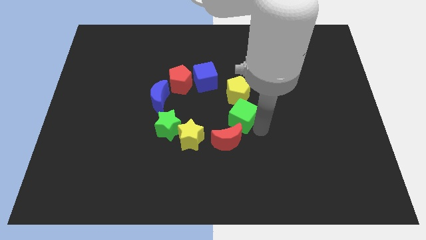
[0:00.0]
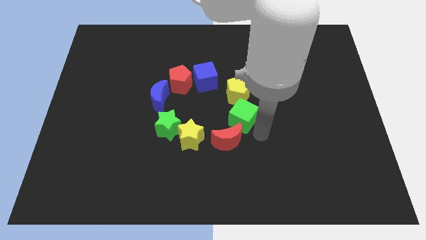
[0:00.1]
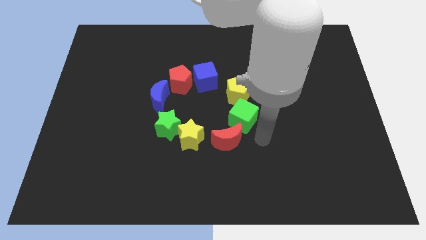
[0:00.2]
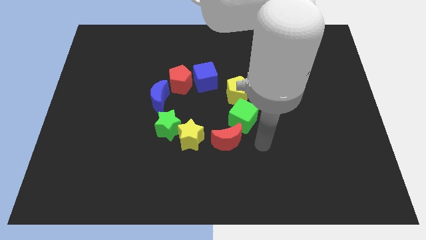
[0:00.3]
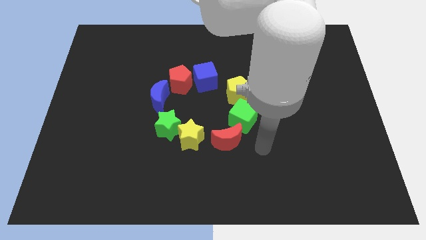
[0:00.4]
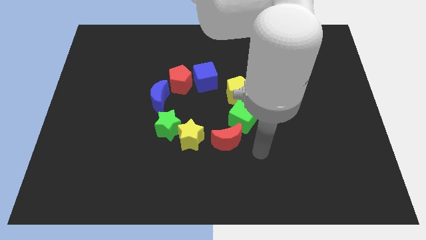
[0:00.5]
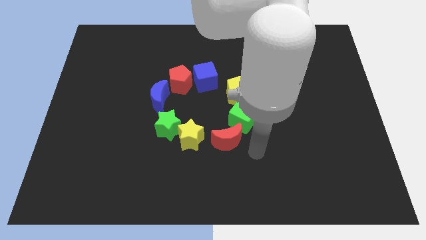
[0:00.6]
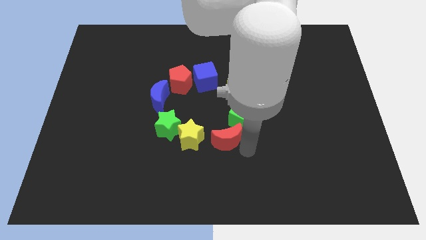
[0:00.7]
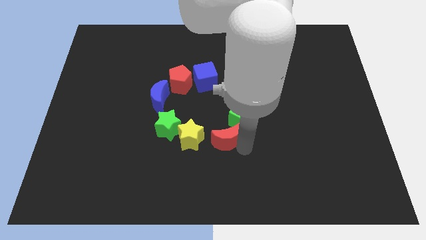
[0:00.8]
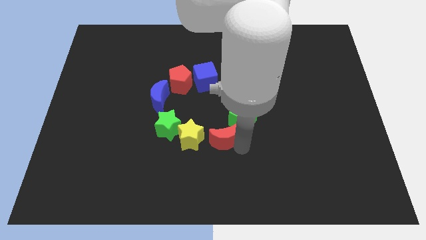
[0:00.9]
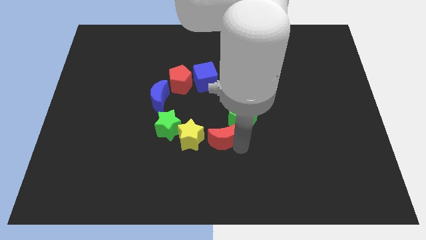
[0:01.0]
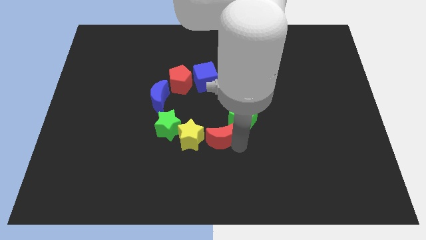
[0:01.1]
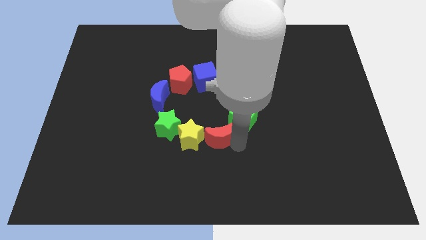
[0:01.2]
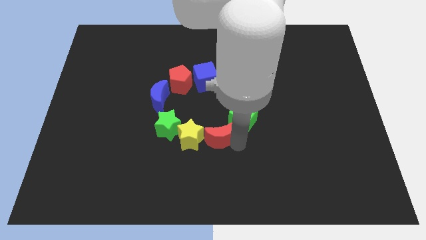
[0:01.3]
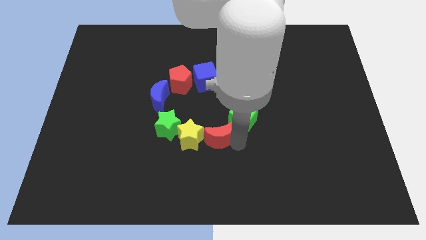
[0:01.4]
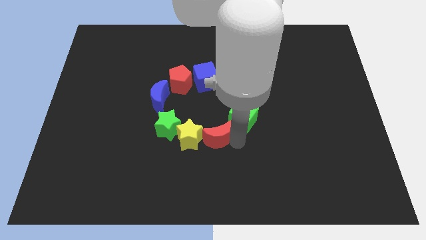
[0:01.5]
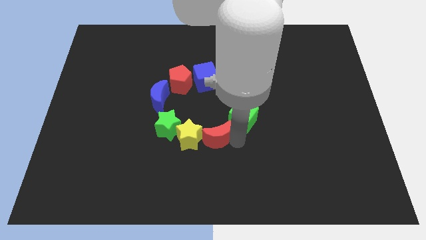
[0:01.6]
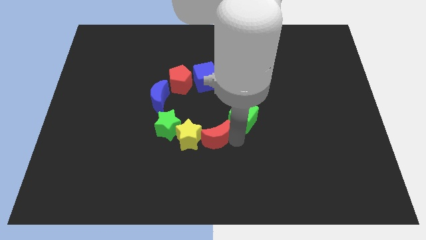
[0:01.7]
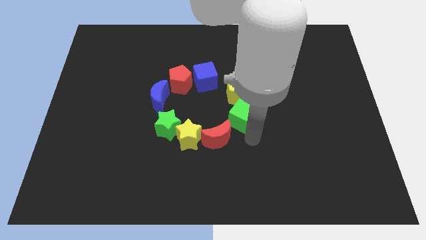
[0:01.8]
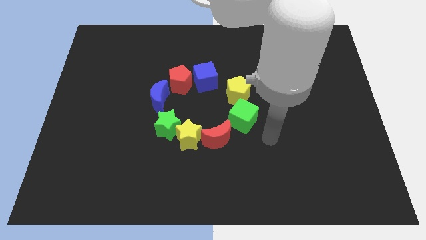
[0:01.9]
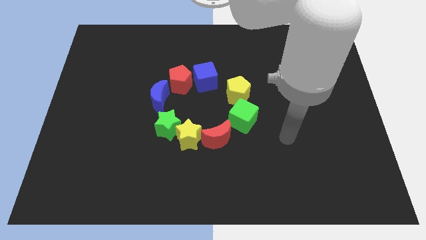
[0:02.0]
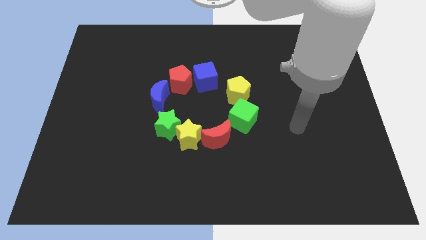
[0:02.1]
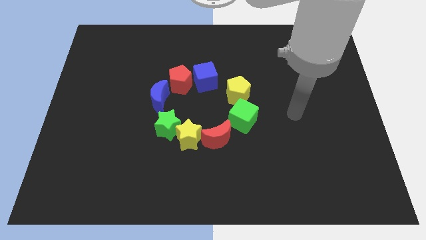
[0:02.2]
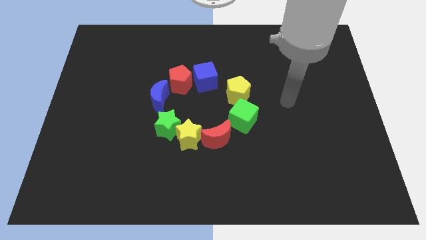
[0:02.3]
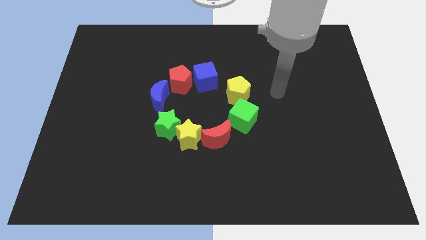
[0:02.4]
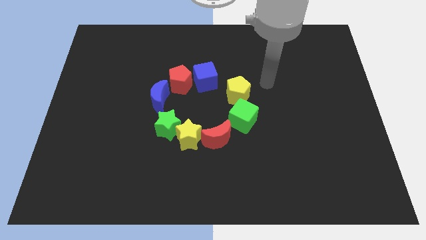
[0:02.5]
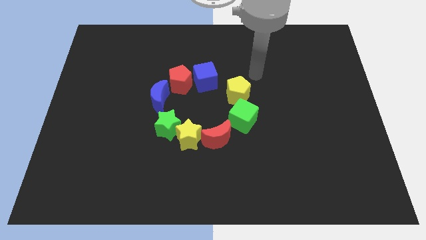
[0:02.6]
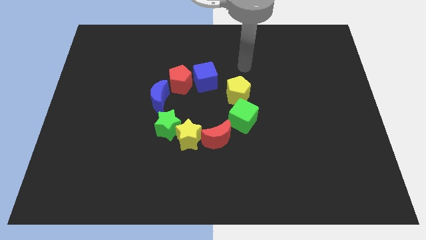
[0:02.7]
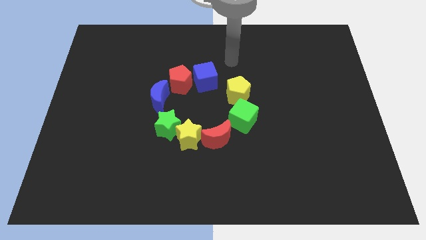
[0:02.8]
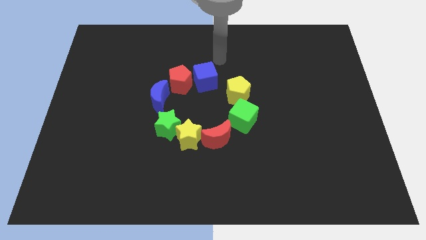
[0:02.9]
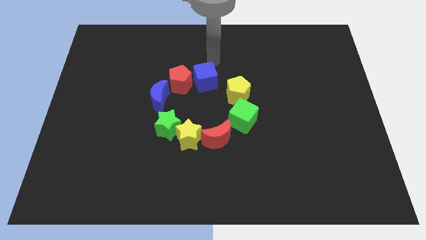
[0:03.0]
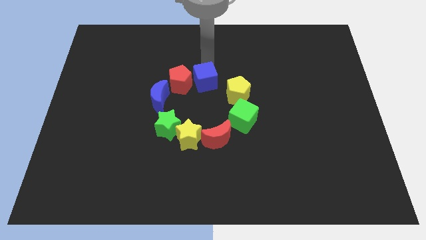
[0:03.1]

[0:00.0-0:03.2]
move the arm above the blue cube

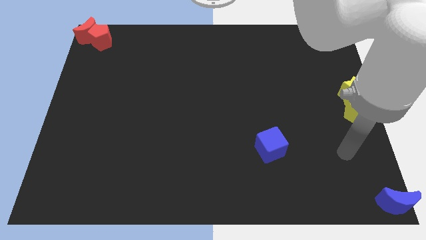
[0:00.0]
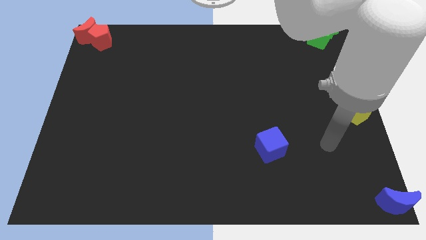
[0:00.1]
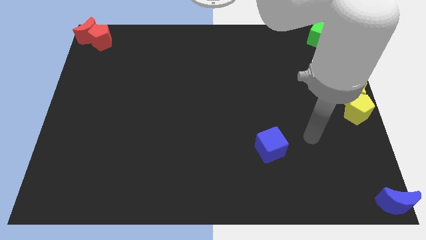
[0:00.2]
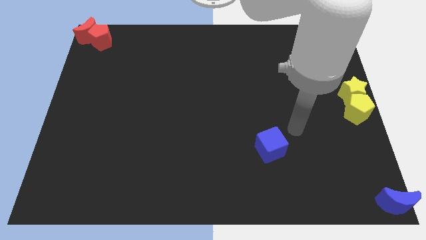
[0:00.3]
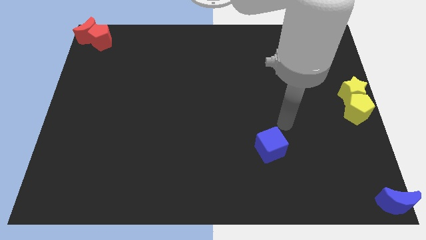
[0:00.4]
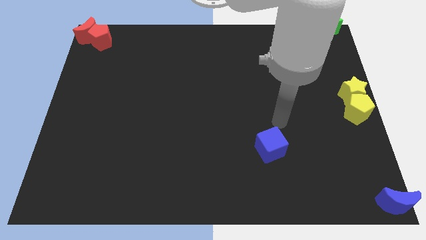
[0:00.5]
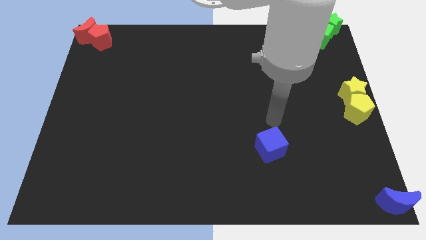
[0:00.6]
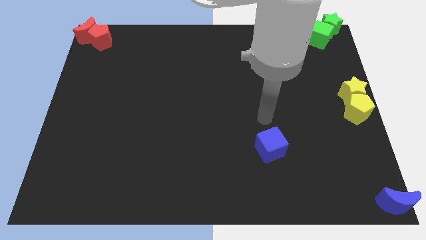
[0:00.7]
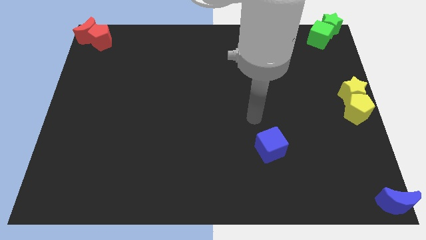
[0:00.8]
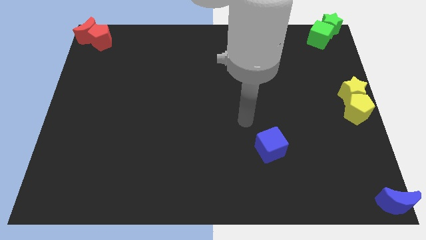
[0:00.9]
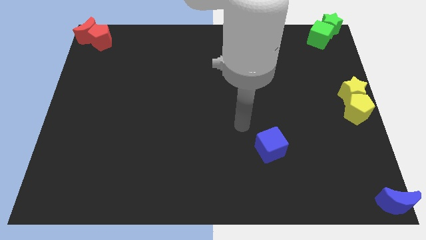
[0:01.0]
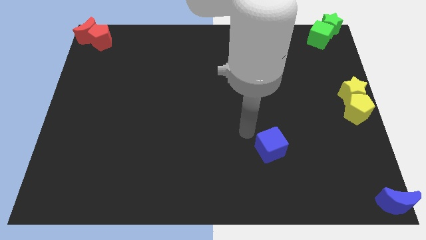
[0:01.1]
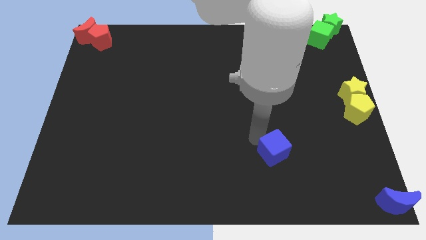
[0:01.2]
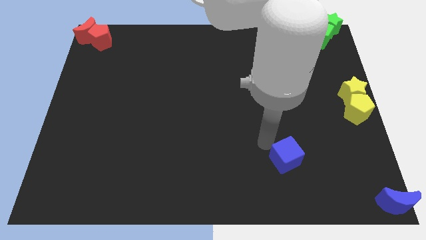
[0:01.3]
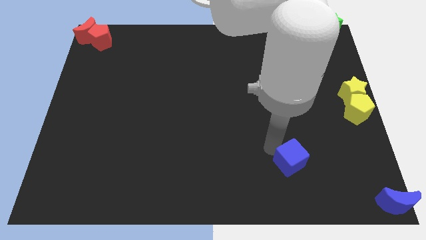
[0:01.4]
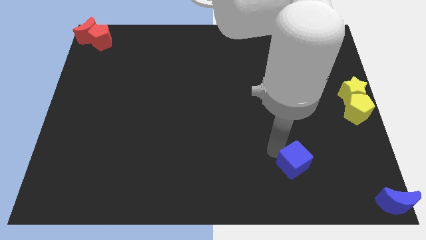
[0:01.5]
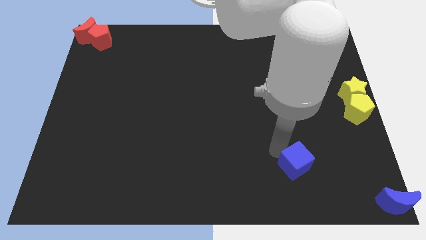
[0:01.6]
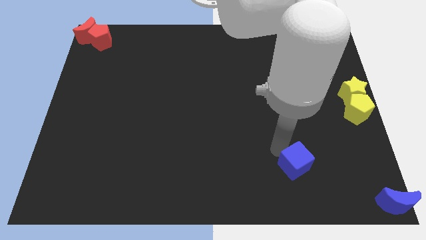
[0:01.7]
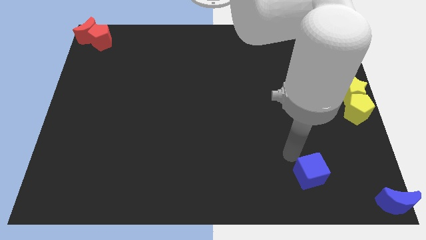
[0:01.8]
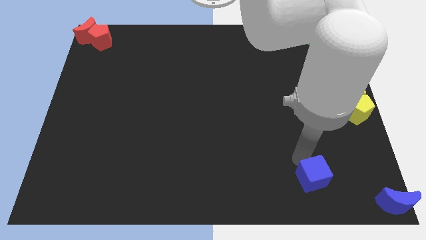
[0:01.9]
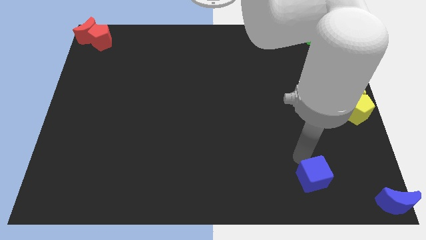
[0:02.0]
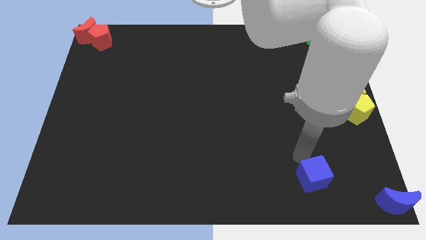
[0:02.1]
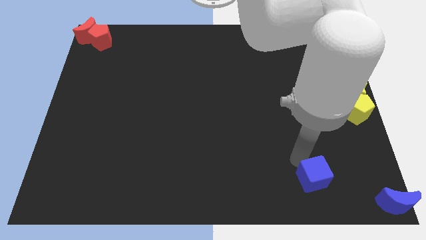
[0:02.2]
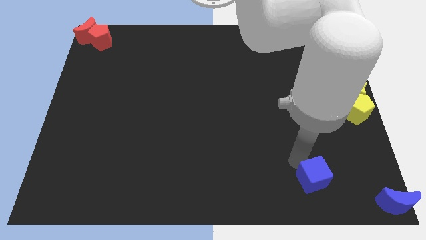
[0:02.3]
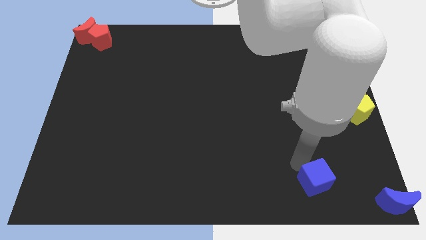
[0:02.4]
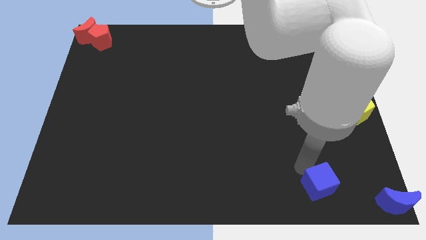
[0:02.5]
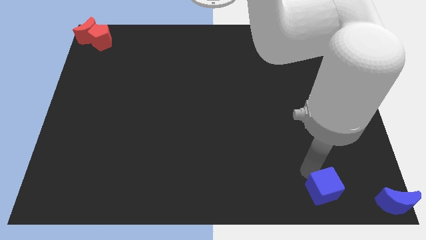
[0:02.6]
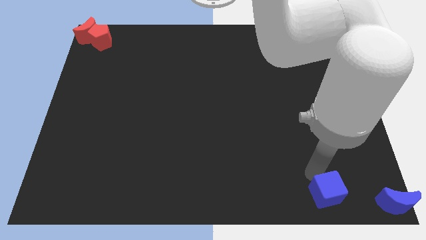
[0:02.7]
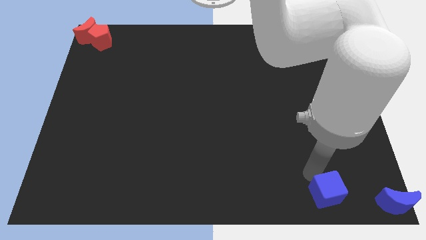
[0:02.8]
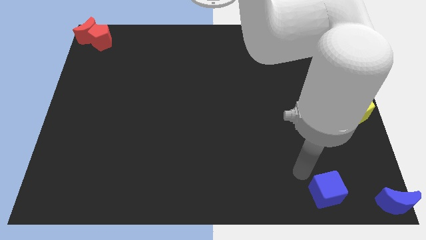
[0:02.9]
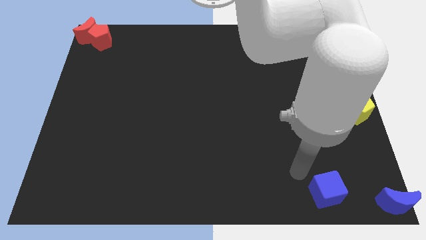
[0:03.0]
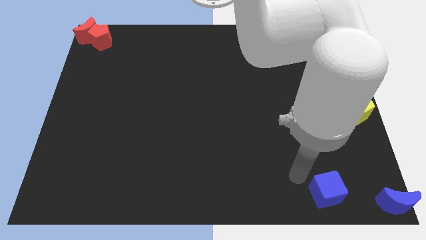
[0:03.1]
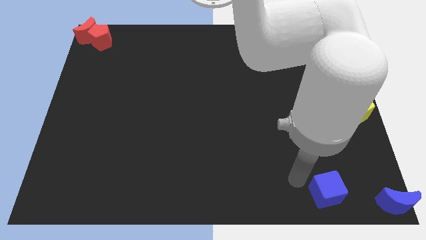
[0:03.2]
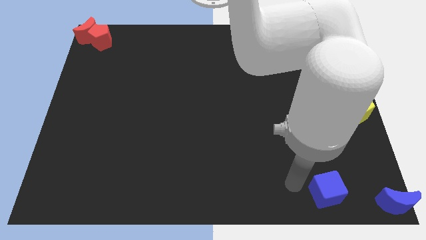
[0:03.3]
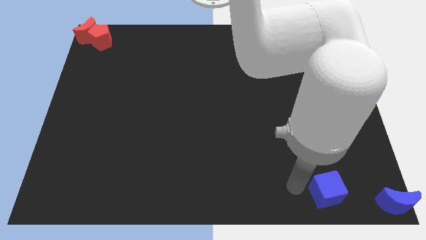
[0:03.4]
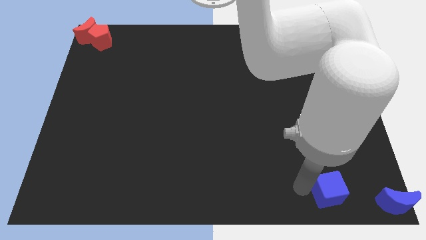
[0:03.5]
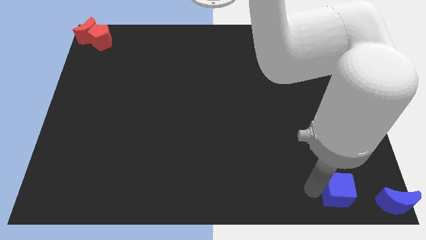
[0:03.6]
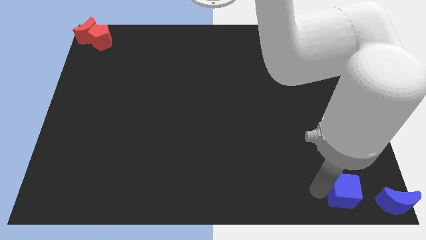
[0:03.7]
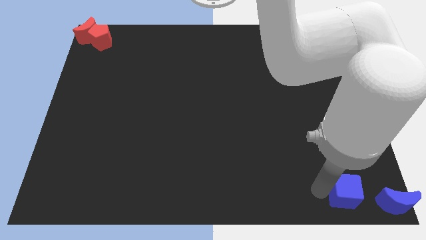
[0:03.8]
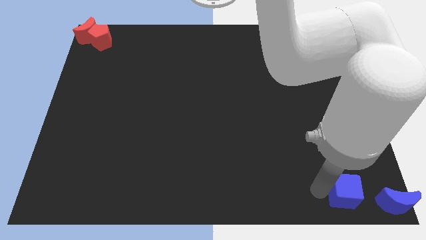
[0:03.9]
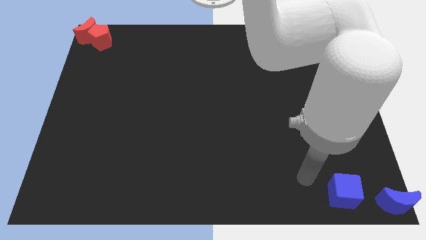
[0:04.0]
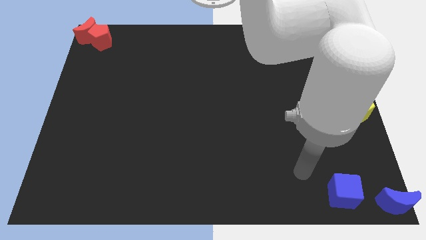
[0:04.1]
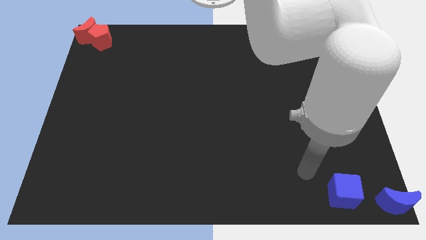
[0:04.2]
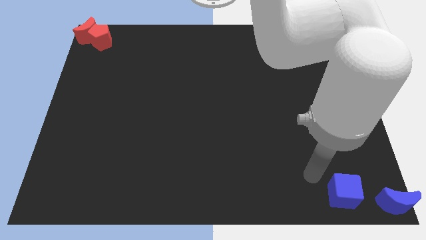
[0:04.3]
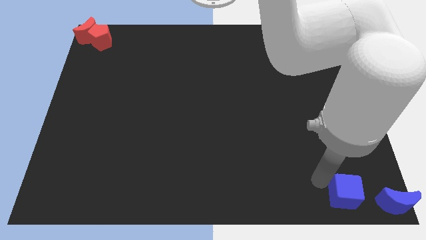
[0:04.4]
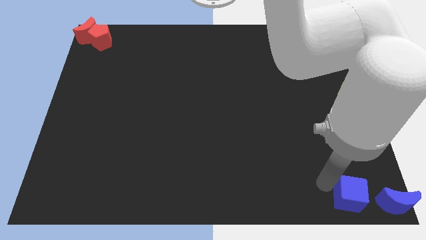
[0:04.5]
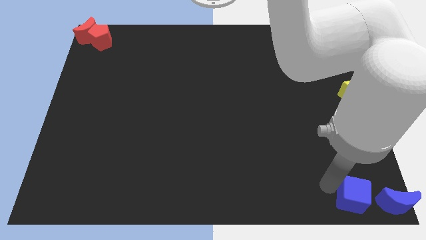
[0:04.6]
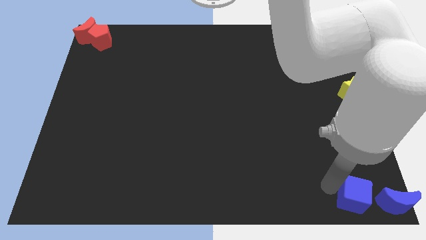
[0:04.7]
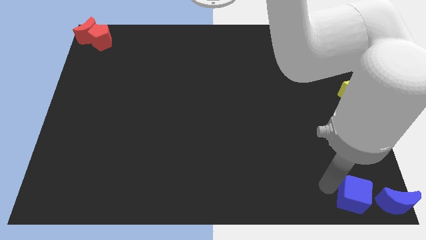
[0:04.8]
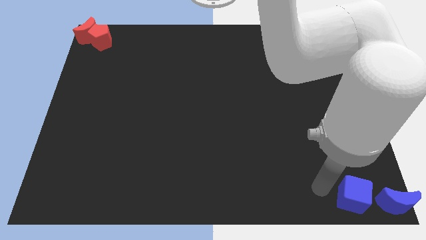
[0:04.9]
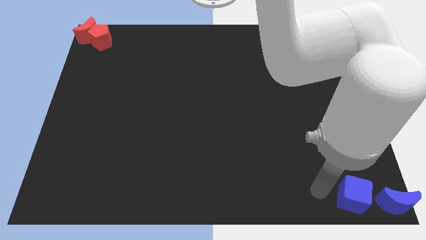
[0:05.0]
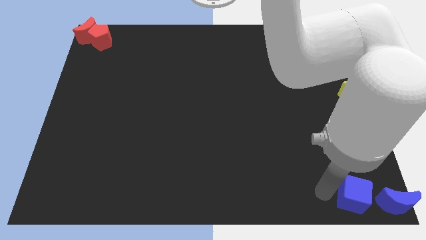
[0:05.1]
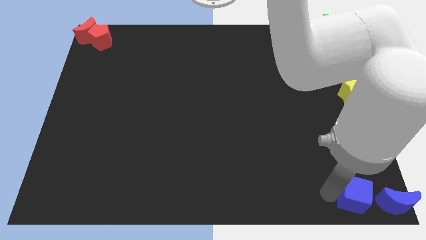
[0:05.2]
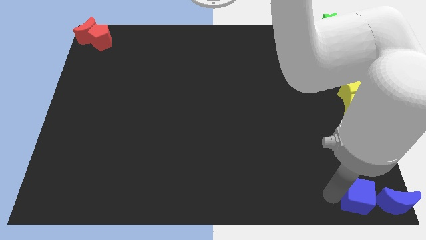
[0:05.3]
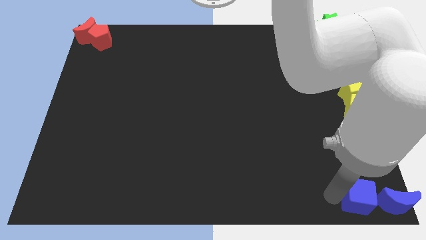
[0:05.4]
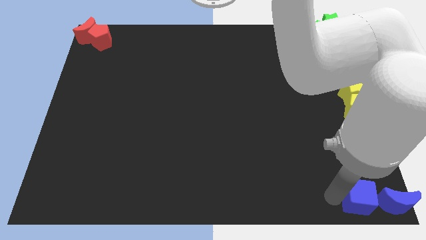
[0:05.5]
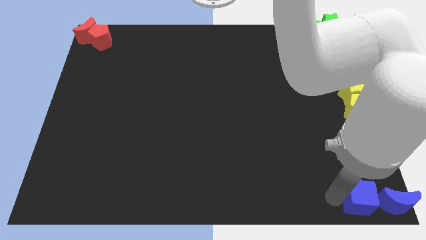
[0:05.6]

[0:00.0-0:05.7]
move the blue cube and blue crescent to the bottom right corner
